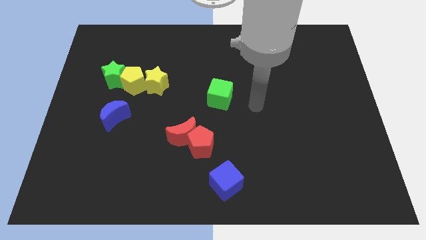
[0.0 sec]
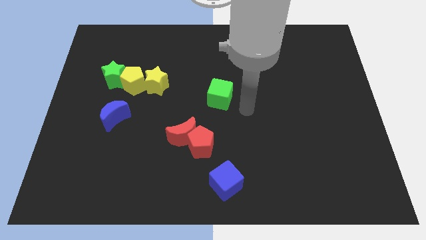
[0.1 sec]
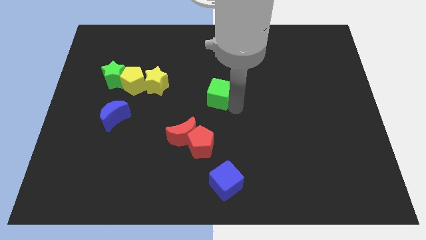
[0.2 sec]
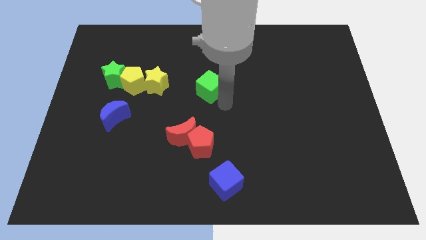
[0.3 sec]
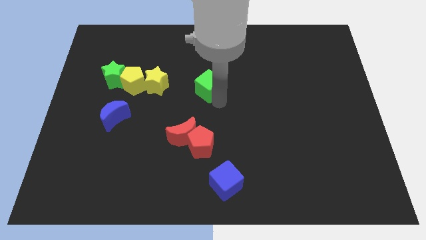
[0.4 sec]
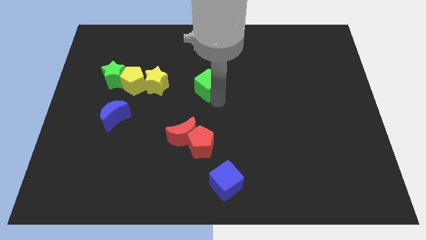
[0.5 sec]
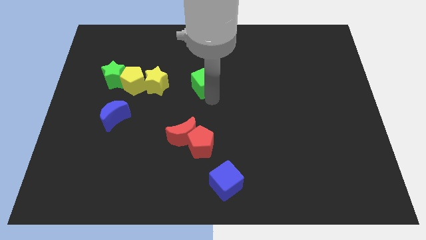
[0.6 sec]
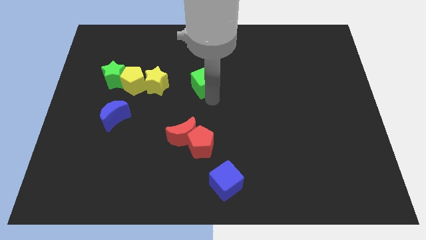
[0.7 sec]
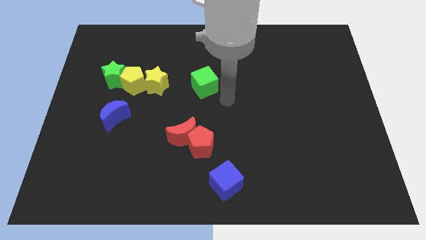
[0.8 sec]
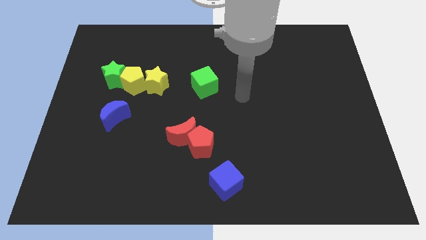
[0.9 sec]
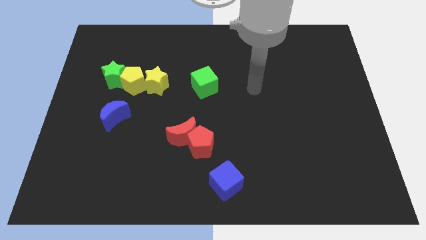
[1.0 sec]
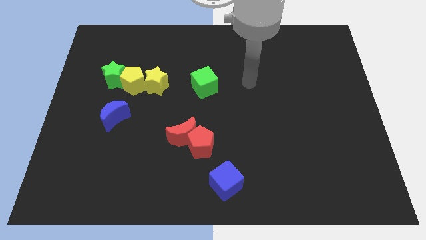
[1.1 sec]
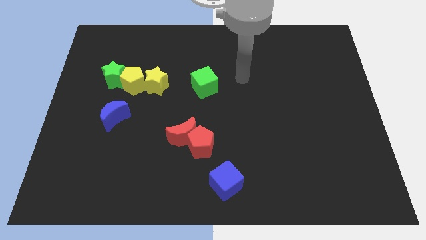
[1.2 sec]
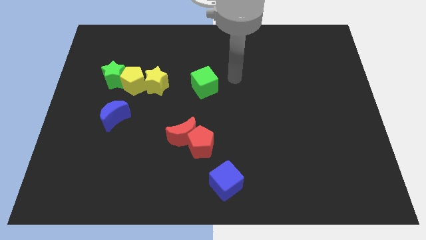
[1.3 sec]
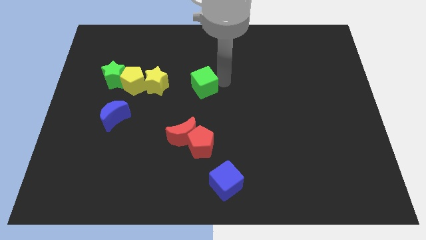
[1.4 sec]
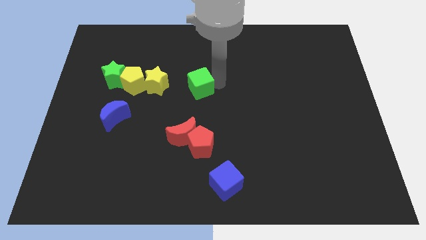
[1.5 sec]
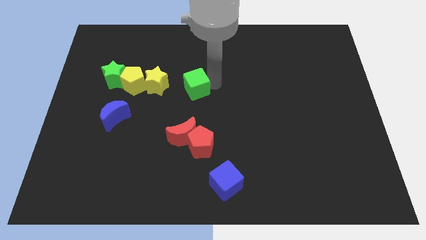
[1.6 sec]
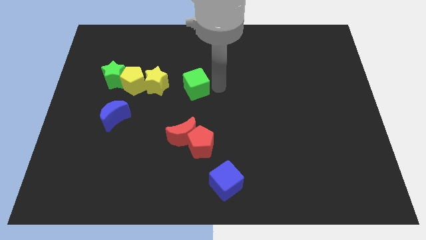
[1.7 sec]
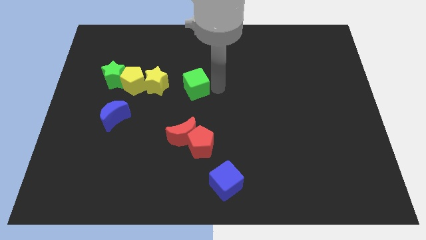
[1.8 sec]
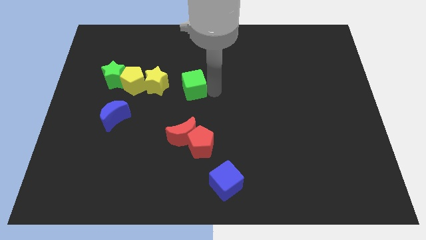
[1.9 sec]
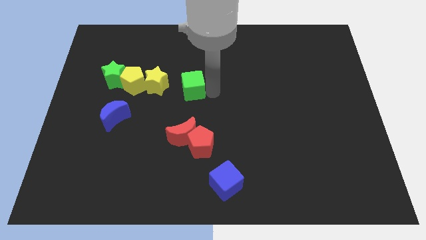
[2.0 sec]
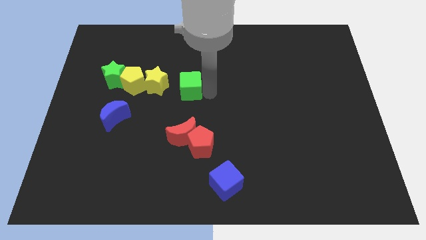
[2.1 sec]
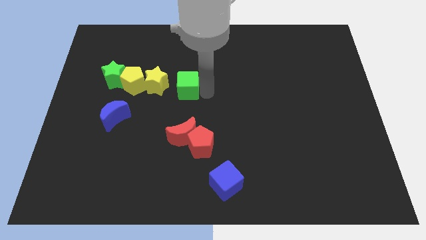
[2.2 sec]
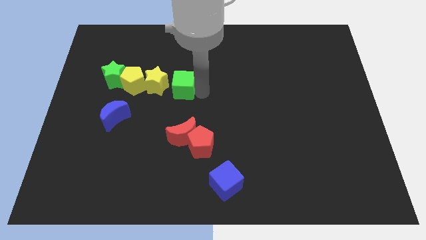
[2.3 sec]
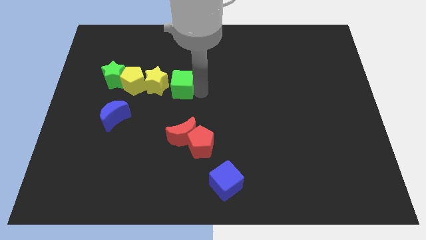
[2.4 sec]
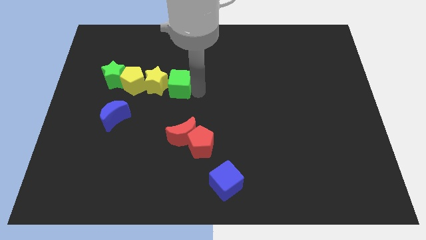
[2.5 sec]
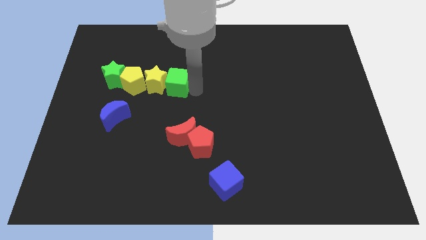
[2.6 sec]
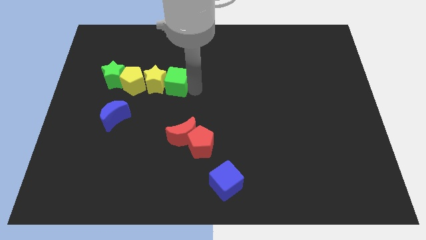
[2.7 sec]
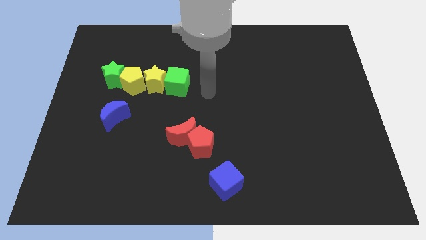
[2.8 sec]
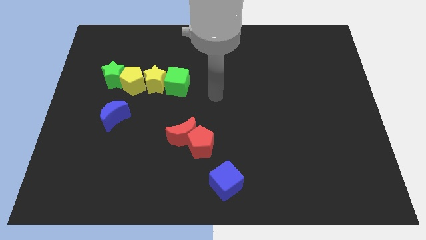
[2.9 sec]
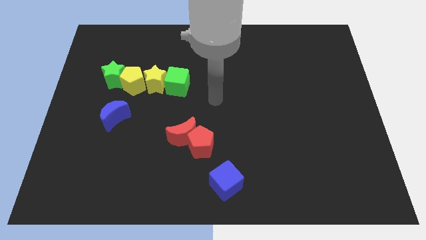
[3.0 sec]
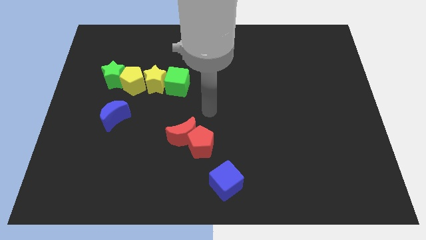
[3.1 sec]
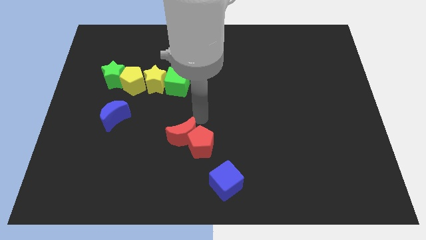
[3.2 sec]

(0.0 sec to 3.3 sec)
slide the green cube to the right side of the yellow star

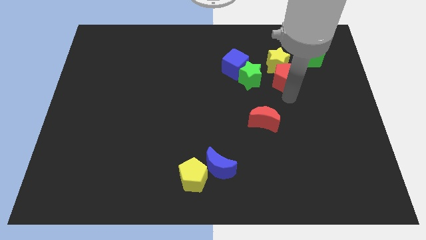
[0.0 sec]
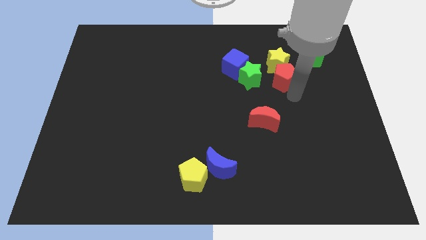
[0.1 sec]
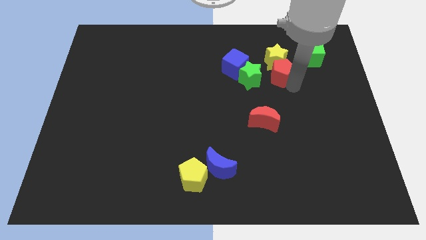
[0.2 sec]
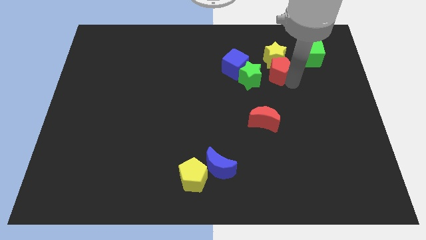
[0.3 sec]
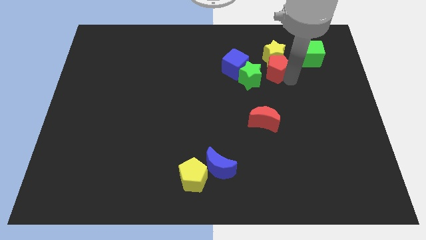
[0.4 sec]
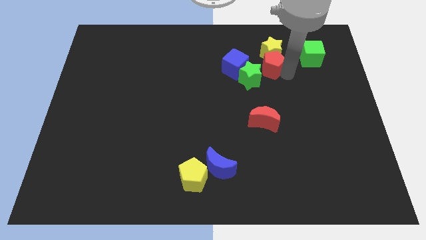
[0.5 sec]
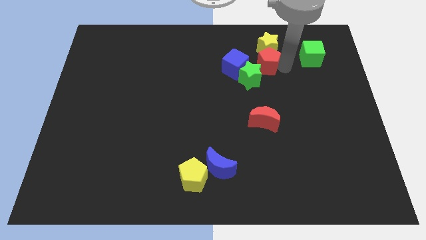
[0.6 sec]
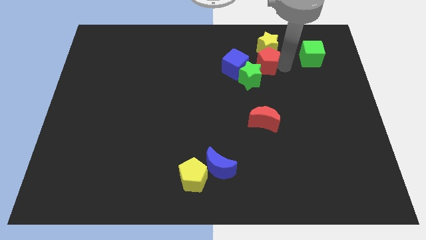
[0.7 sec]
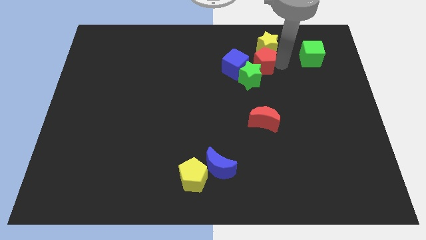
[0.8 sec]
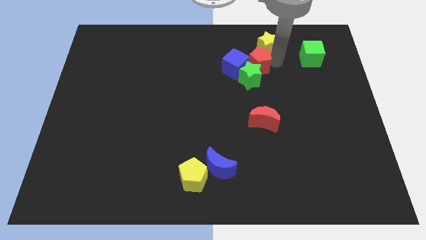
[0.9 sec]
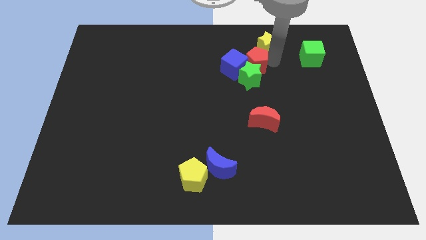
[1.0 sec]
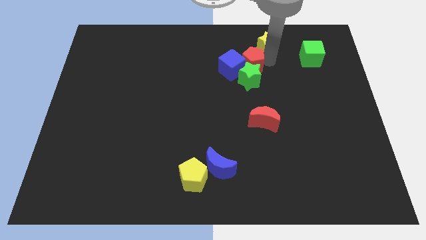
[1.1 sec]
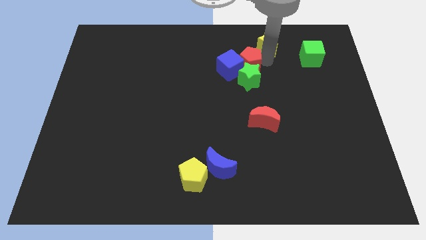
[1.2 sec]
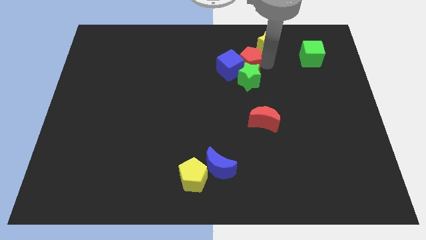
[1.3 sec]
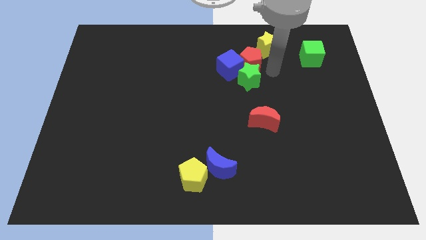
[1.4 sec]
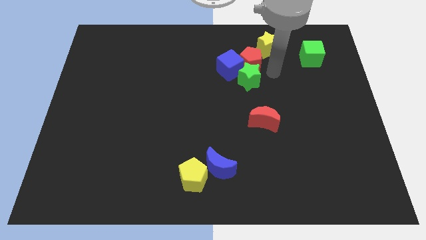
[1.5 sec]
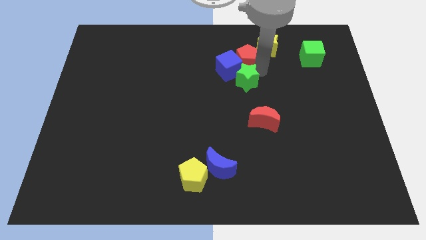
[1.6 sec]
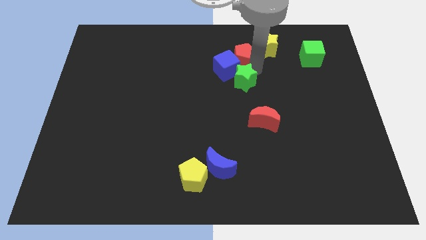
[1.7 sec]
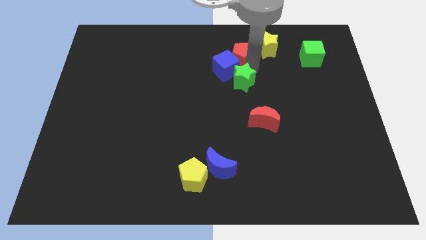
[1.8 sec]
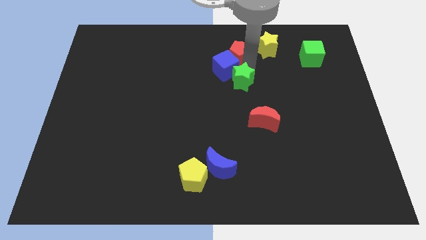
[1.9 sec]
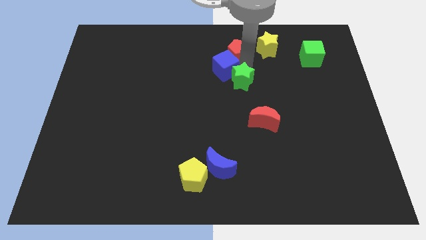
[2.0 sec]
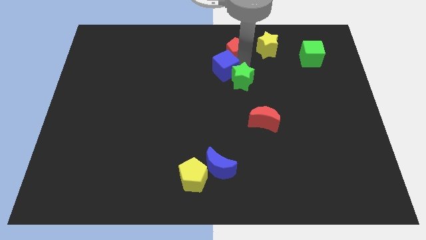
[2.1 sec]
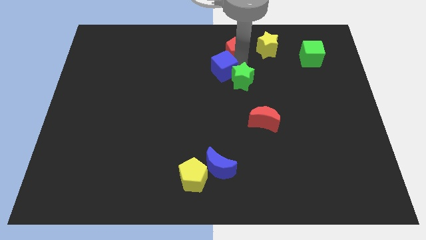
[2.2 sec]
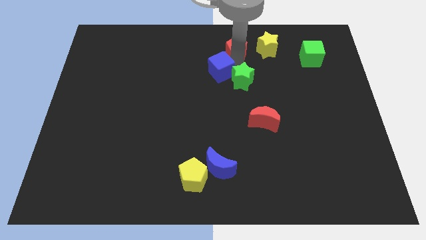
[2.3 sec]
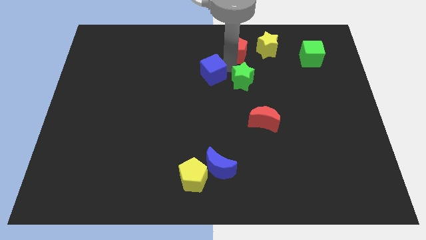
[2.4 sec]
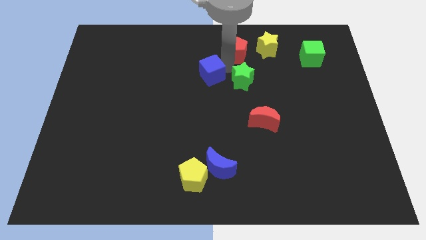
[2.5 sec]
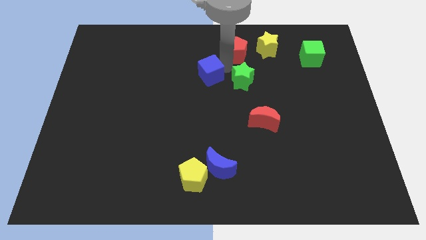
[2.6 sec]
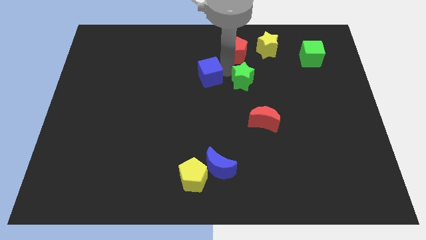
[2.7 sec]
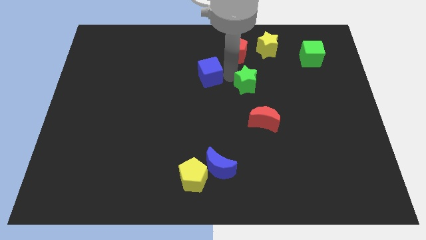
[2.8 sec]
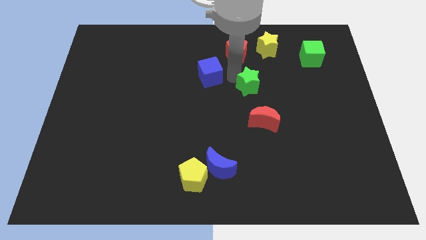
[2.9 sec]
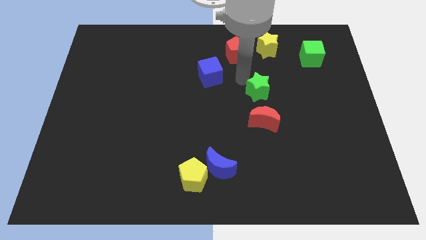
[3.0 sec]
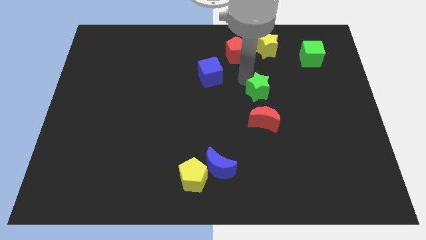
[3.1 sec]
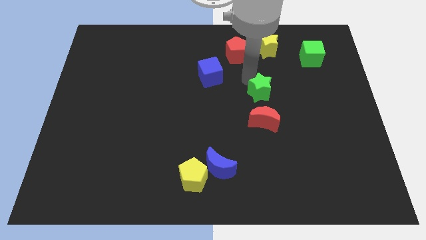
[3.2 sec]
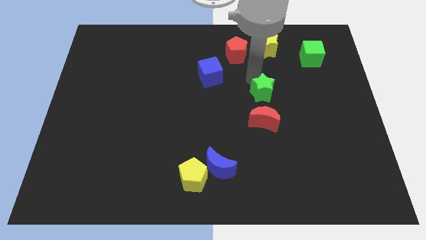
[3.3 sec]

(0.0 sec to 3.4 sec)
place the green star above the red moon

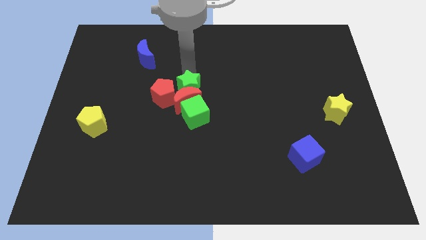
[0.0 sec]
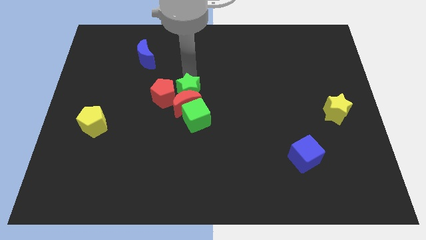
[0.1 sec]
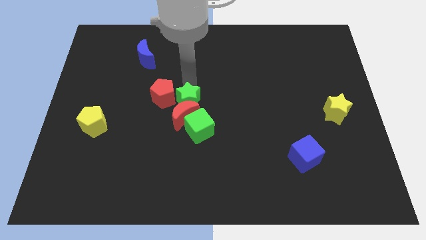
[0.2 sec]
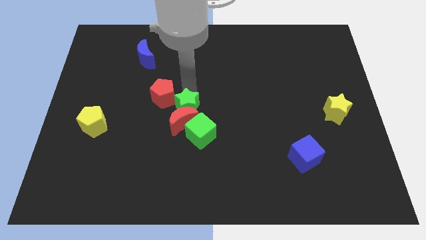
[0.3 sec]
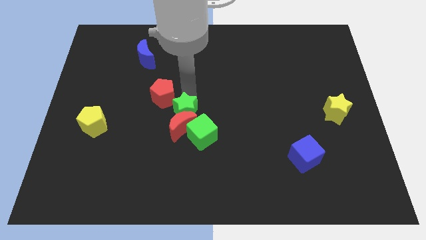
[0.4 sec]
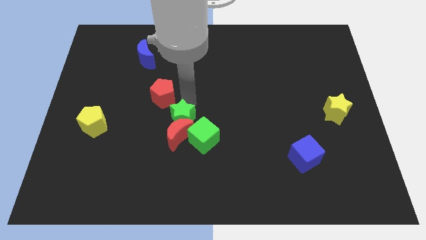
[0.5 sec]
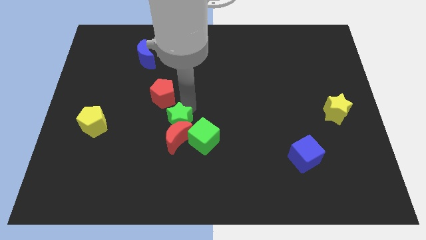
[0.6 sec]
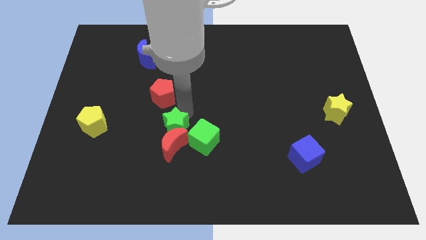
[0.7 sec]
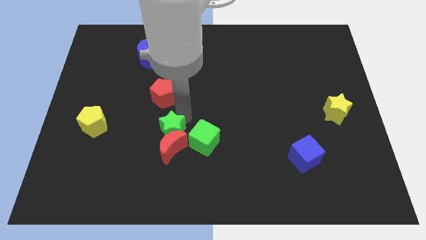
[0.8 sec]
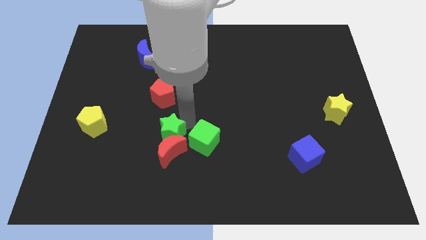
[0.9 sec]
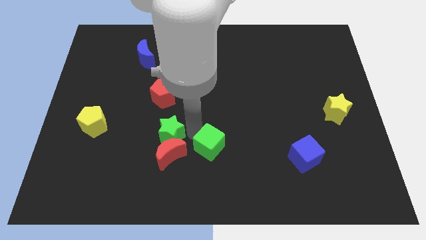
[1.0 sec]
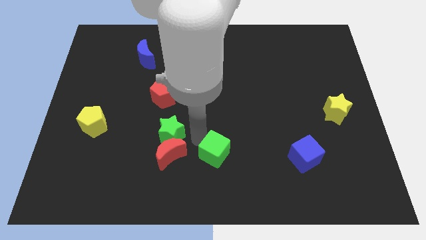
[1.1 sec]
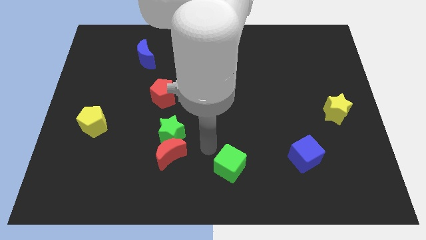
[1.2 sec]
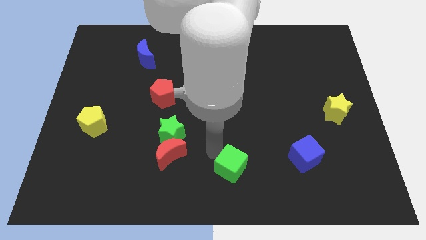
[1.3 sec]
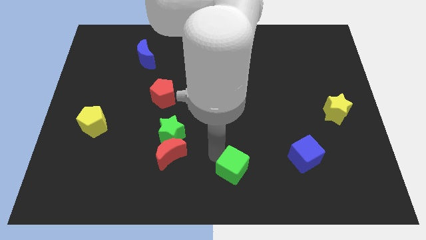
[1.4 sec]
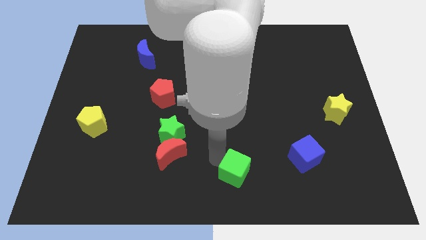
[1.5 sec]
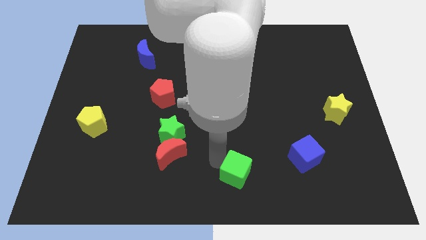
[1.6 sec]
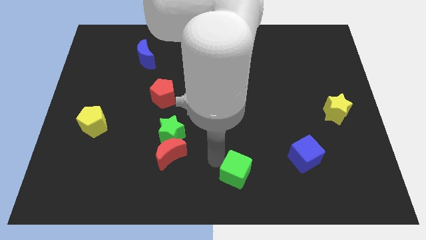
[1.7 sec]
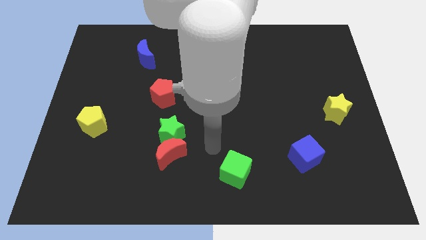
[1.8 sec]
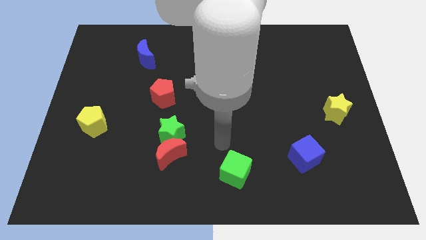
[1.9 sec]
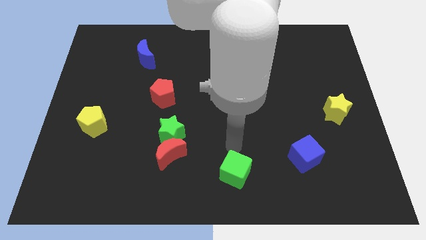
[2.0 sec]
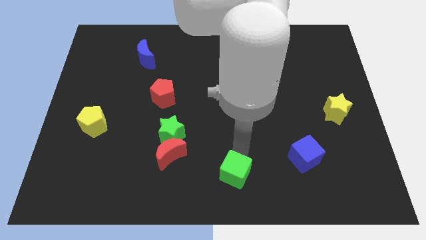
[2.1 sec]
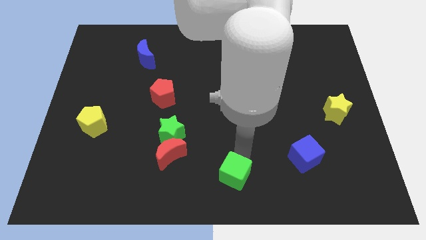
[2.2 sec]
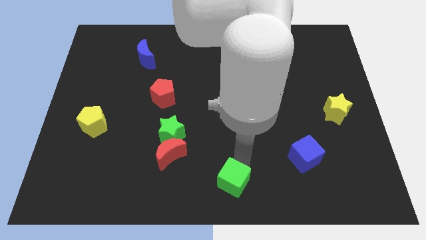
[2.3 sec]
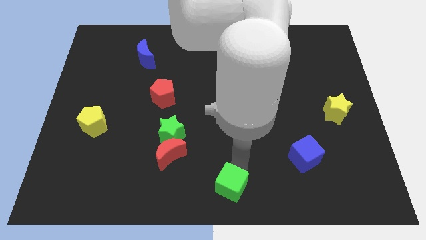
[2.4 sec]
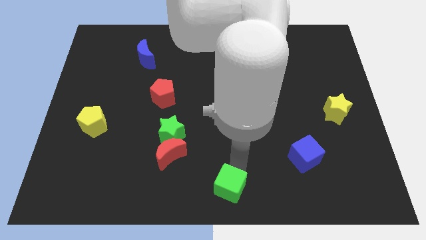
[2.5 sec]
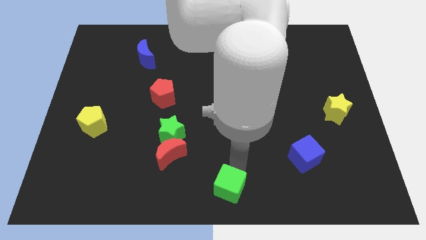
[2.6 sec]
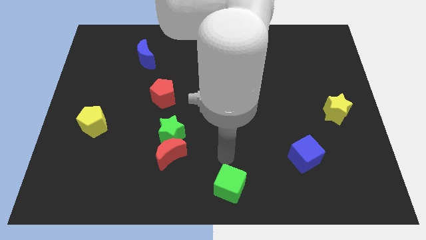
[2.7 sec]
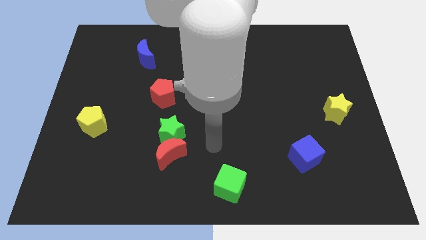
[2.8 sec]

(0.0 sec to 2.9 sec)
push blue cube to bottom center
